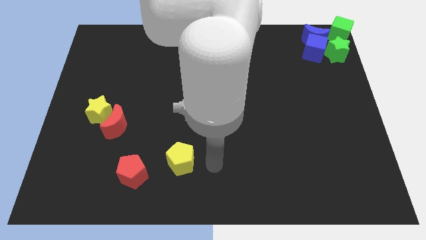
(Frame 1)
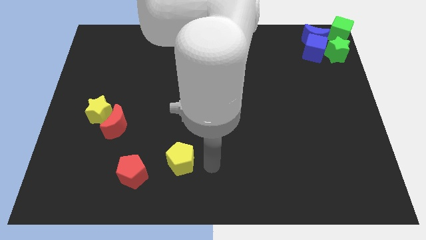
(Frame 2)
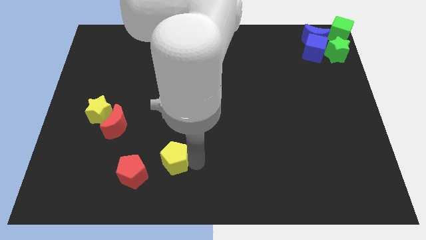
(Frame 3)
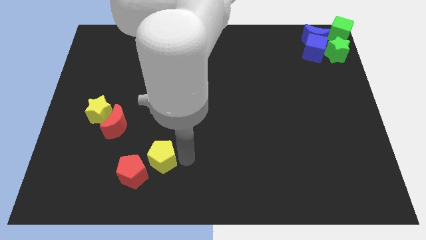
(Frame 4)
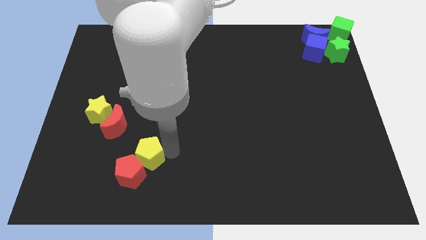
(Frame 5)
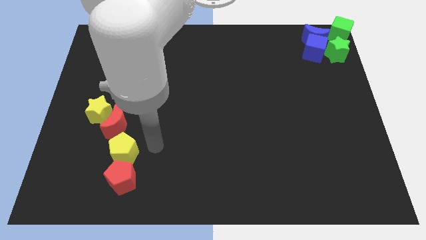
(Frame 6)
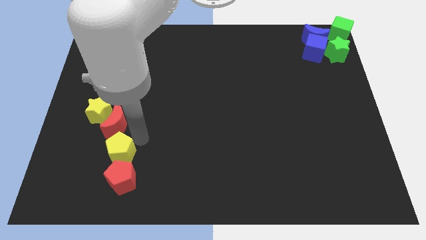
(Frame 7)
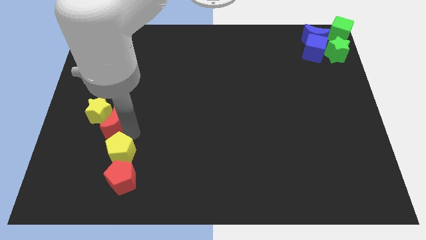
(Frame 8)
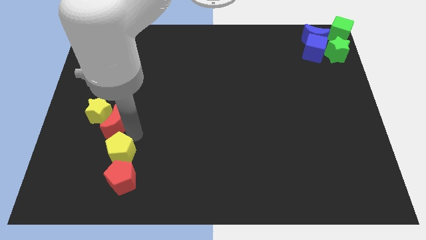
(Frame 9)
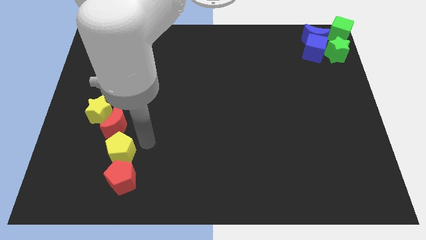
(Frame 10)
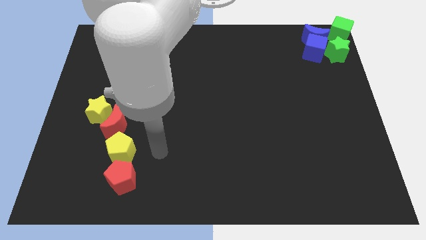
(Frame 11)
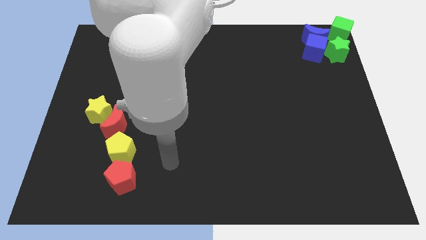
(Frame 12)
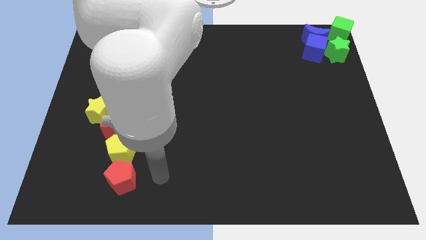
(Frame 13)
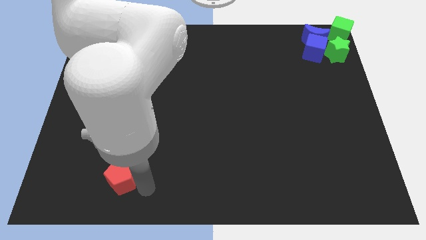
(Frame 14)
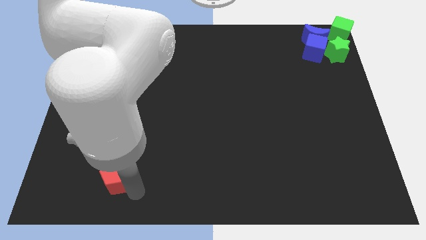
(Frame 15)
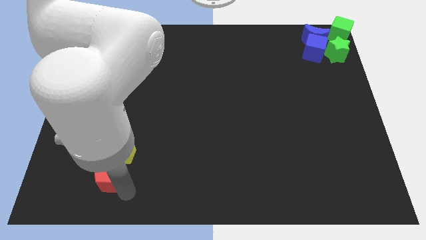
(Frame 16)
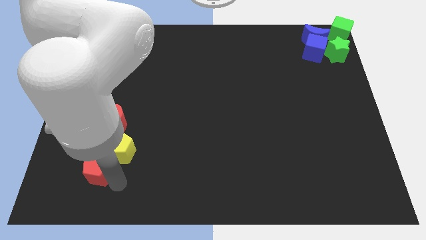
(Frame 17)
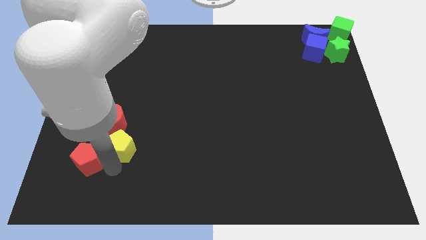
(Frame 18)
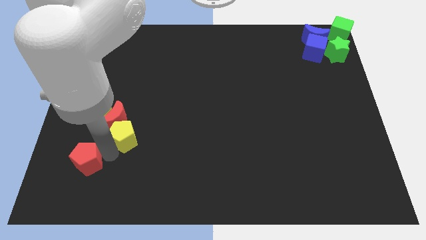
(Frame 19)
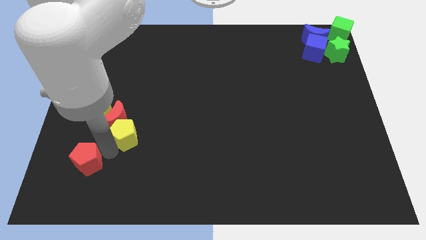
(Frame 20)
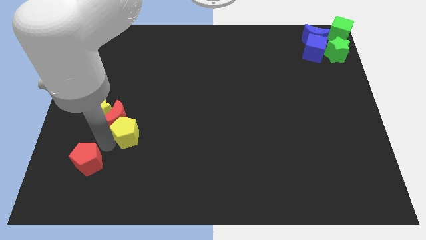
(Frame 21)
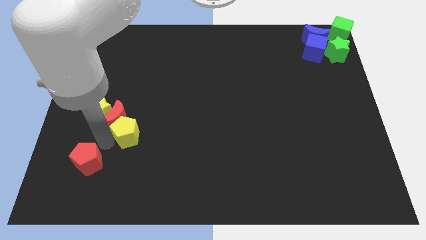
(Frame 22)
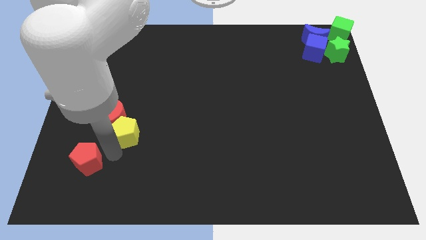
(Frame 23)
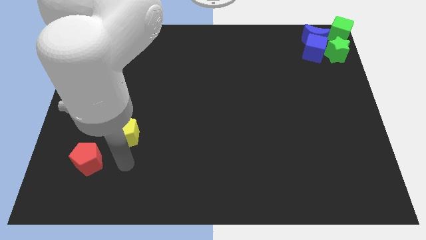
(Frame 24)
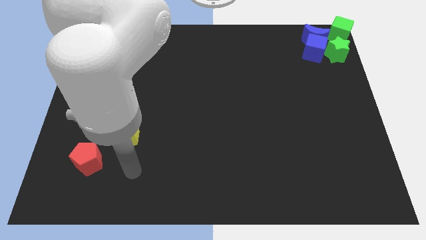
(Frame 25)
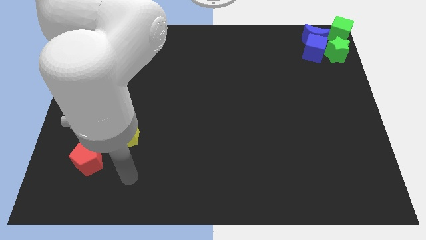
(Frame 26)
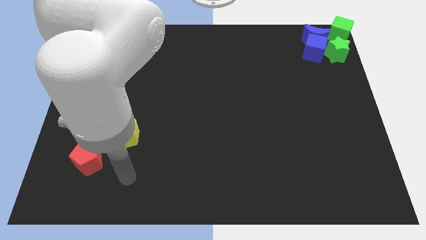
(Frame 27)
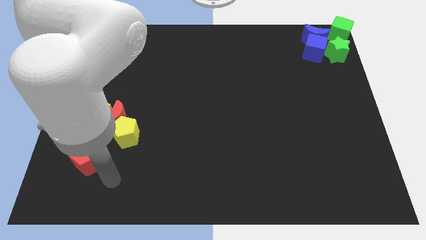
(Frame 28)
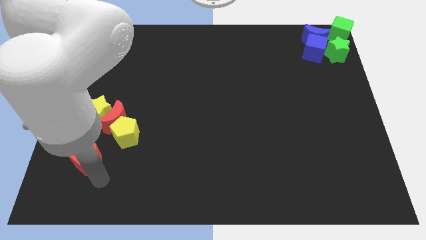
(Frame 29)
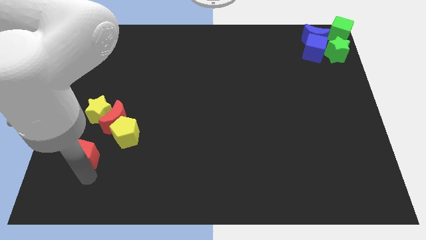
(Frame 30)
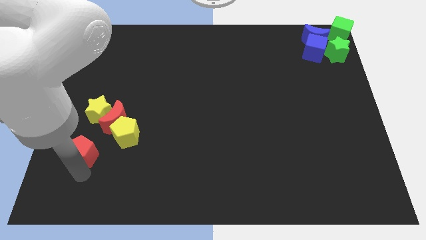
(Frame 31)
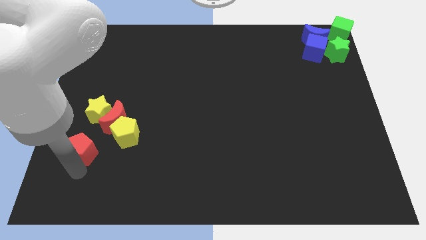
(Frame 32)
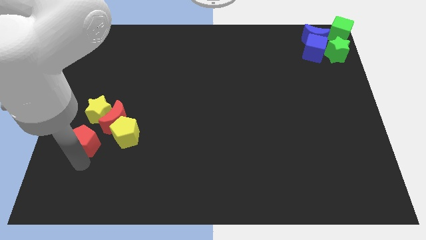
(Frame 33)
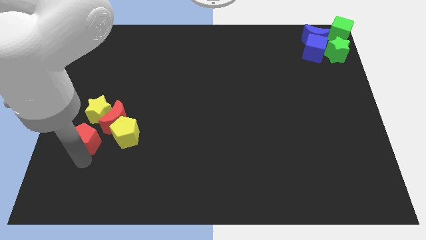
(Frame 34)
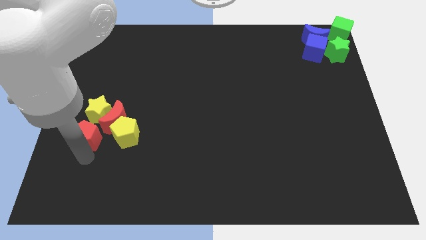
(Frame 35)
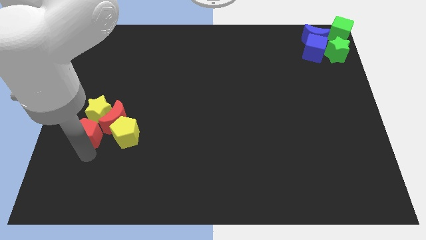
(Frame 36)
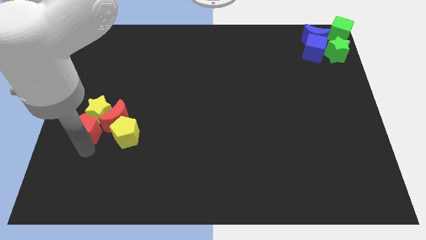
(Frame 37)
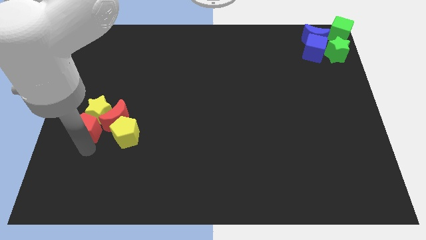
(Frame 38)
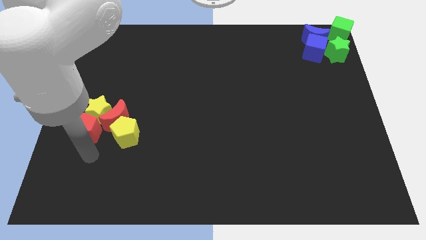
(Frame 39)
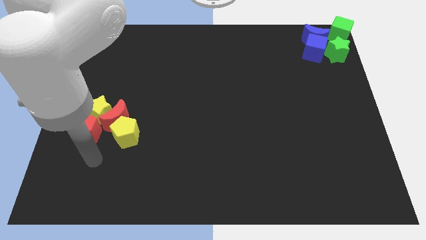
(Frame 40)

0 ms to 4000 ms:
move yellow and red blocks together at one place

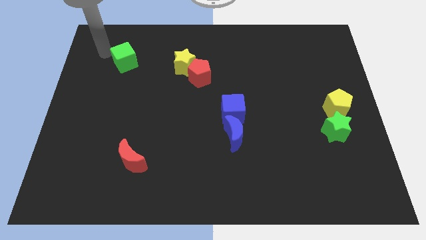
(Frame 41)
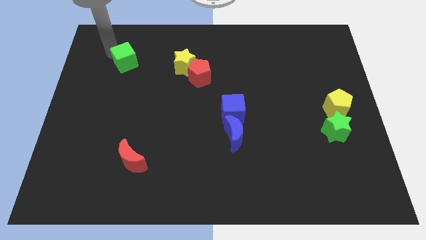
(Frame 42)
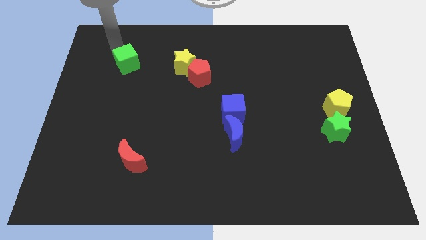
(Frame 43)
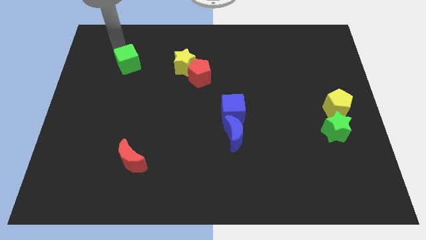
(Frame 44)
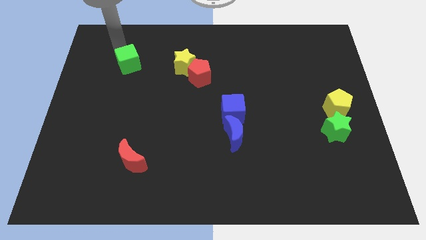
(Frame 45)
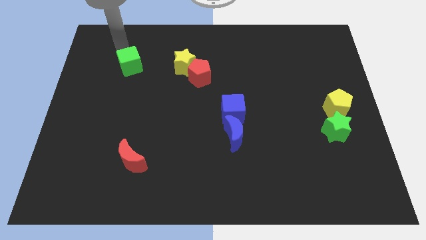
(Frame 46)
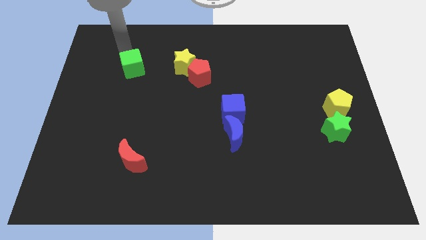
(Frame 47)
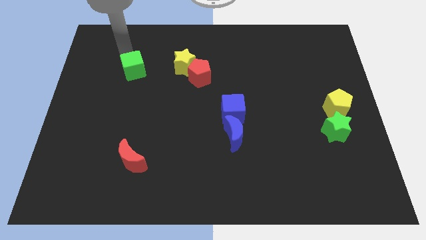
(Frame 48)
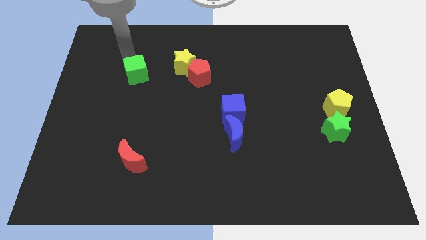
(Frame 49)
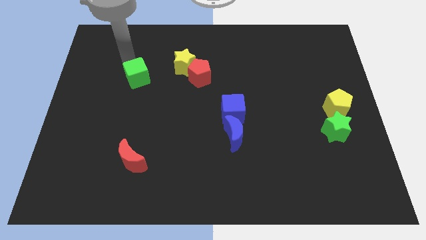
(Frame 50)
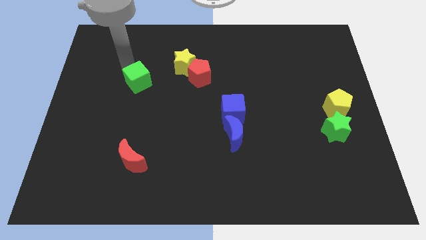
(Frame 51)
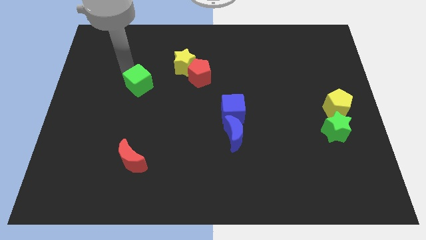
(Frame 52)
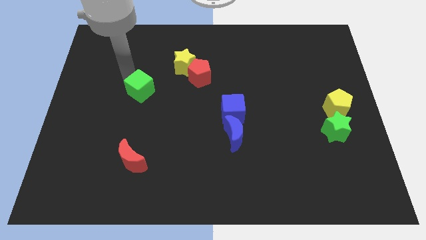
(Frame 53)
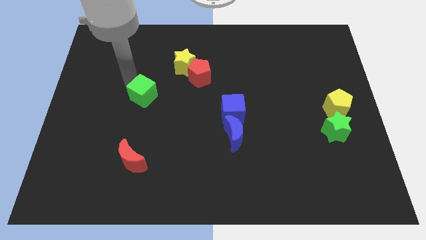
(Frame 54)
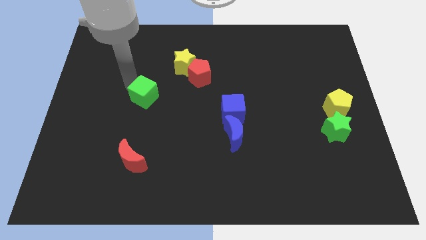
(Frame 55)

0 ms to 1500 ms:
move the green cube slightly down

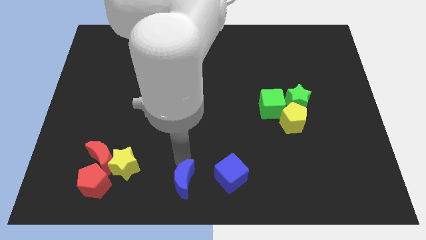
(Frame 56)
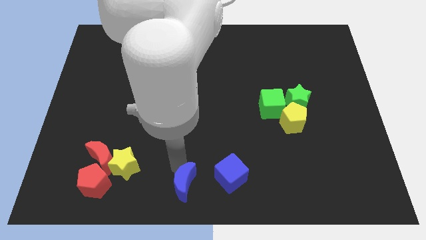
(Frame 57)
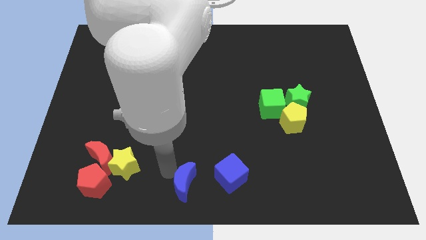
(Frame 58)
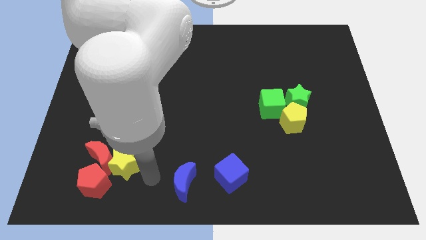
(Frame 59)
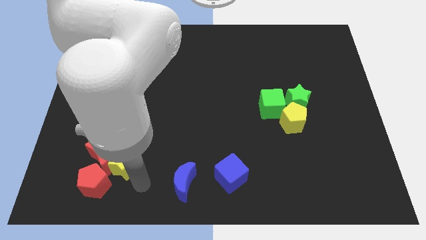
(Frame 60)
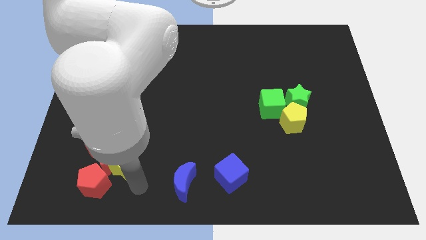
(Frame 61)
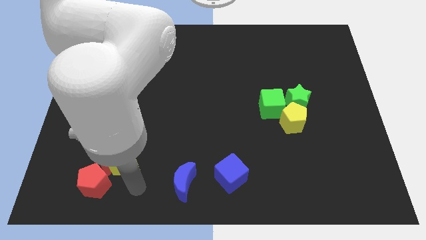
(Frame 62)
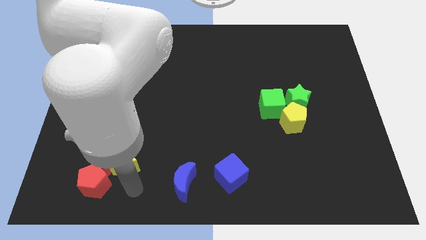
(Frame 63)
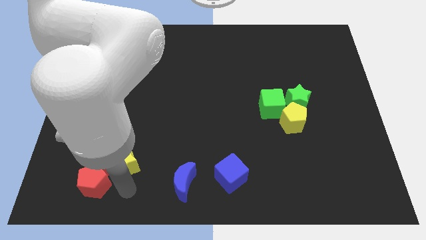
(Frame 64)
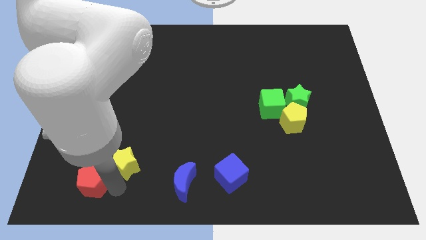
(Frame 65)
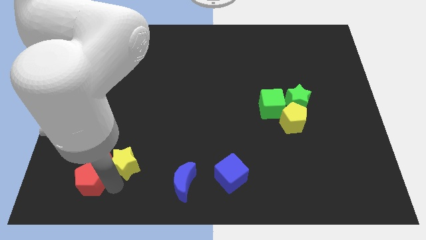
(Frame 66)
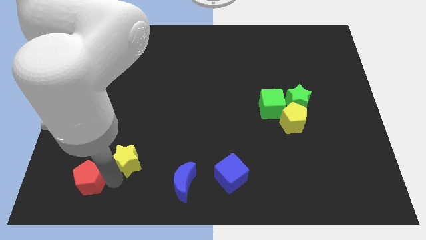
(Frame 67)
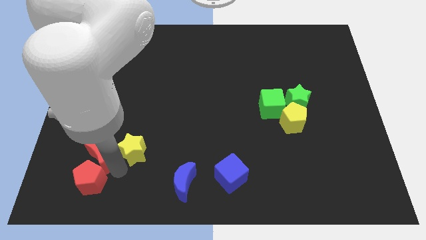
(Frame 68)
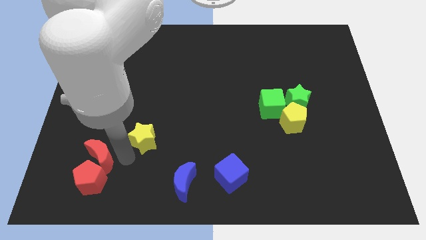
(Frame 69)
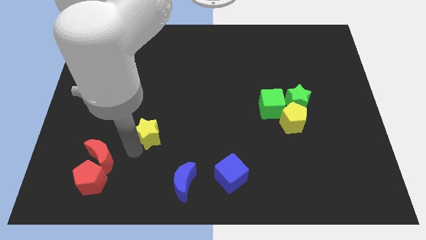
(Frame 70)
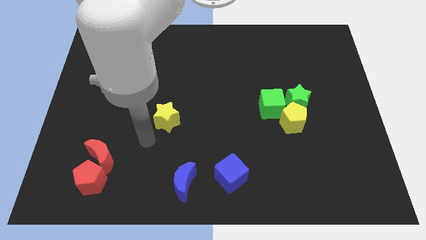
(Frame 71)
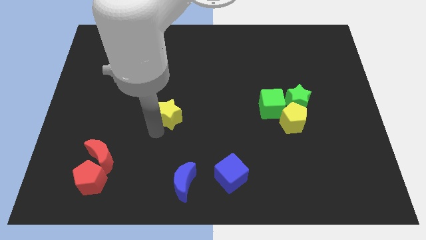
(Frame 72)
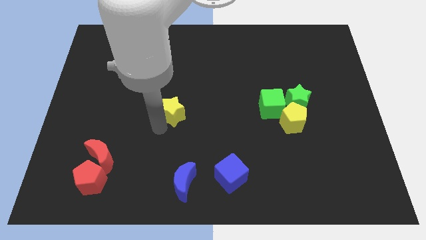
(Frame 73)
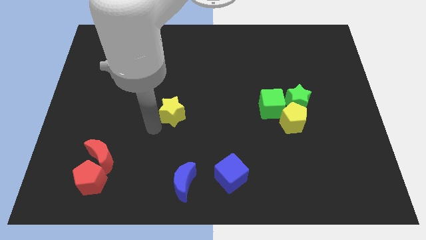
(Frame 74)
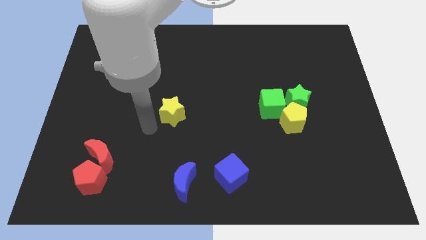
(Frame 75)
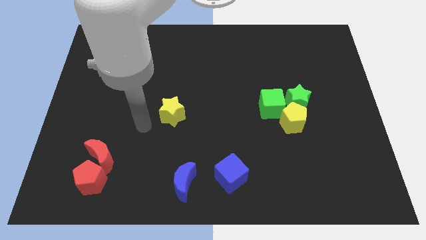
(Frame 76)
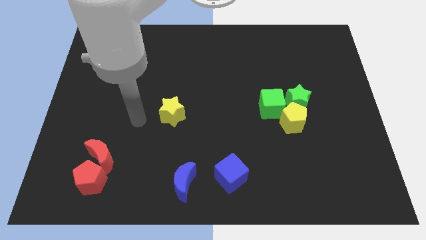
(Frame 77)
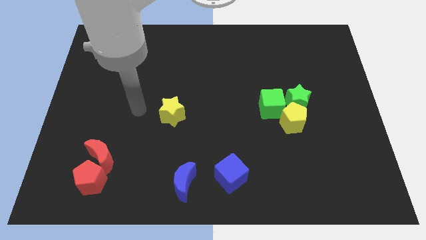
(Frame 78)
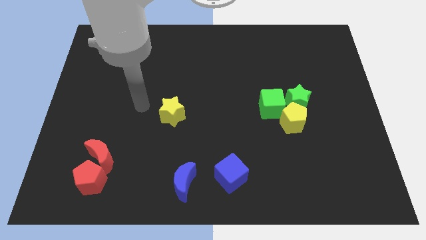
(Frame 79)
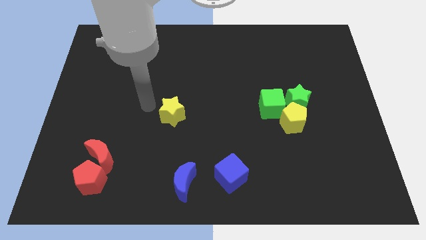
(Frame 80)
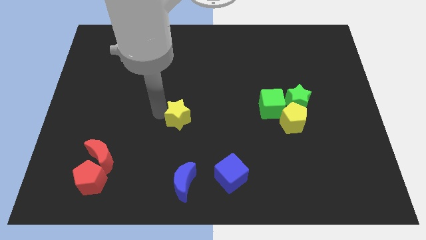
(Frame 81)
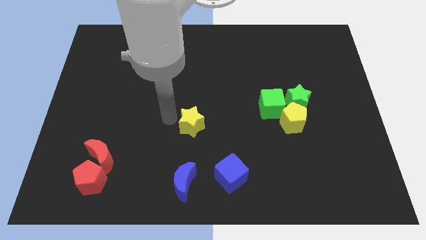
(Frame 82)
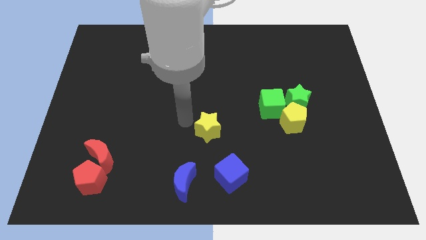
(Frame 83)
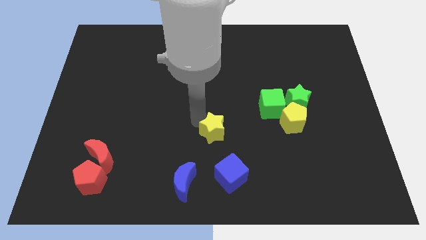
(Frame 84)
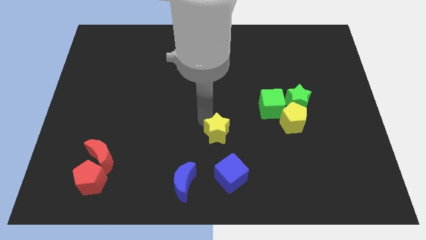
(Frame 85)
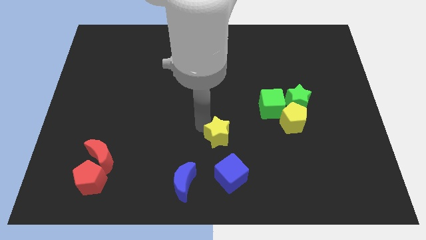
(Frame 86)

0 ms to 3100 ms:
move the yellow star bottom center of the board

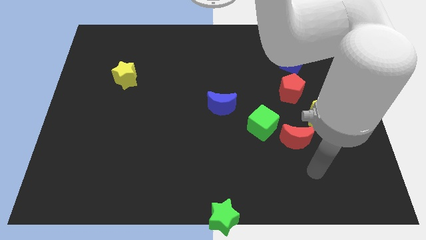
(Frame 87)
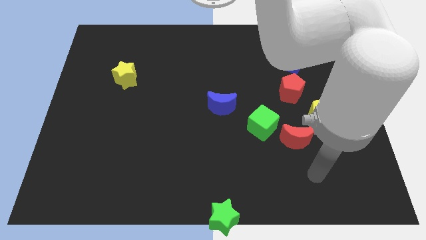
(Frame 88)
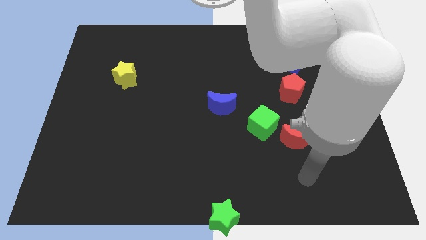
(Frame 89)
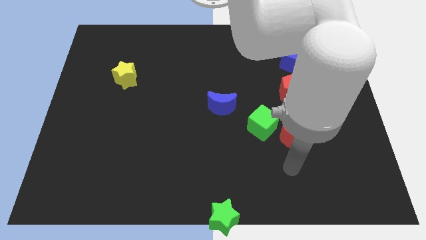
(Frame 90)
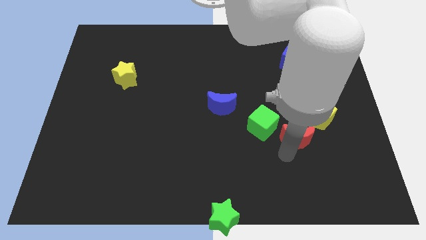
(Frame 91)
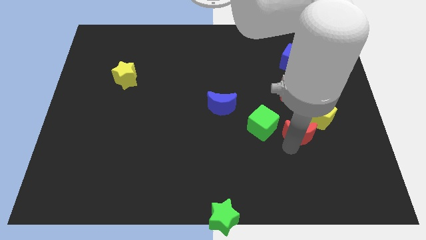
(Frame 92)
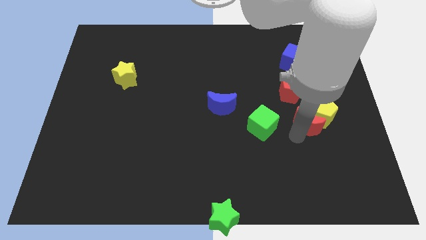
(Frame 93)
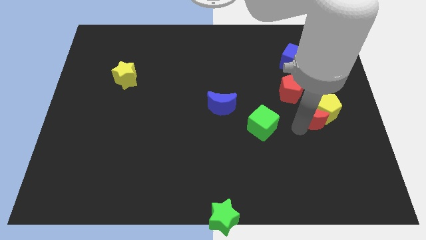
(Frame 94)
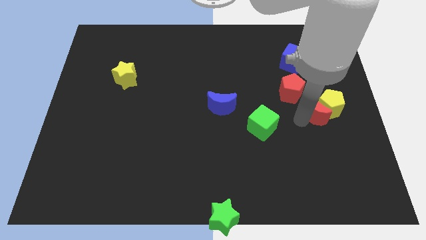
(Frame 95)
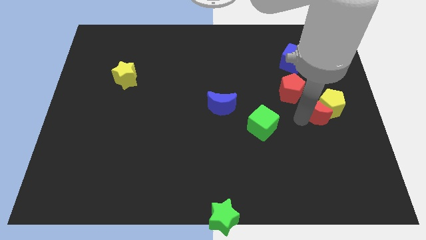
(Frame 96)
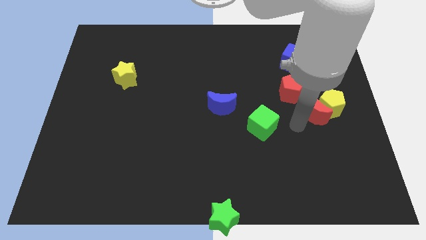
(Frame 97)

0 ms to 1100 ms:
push the red moon and yellow pentagon towards the right side of the board
